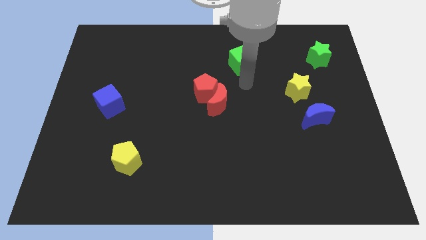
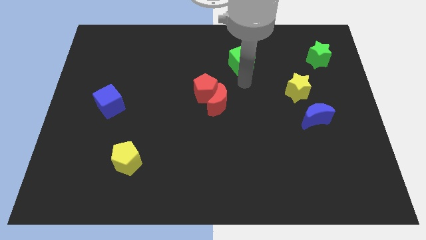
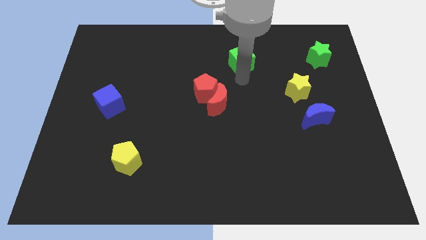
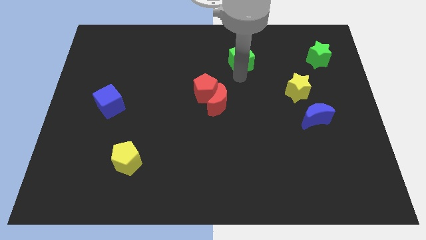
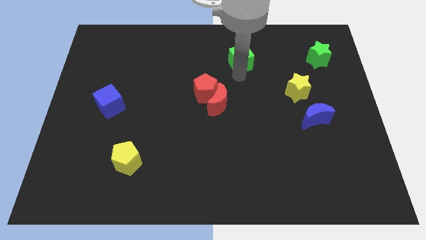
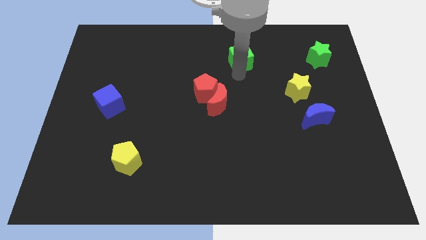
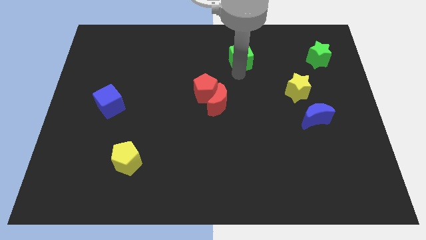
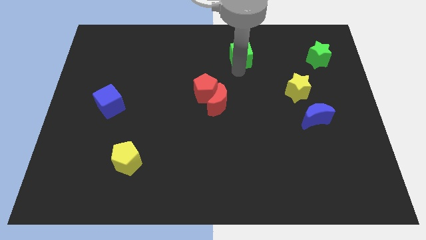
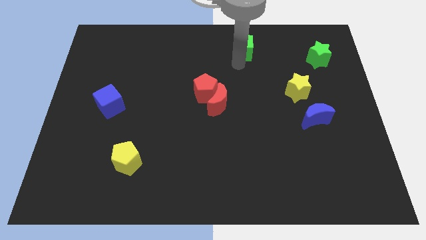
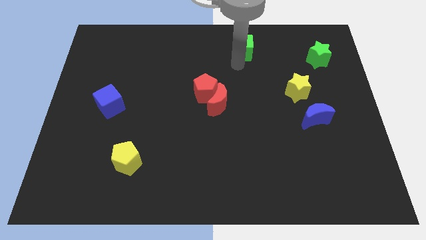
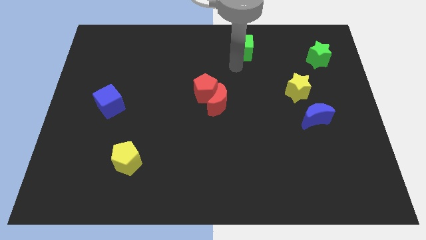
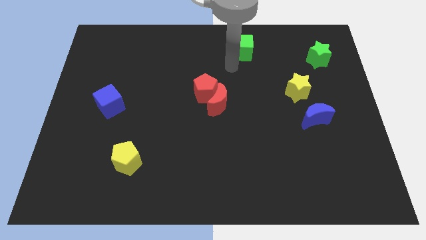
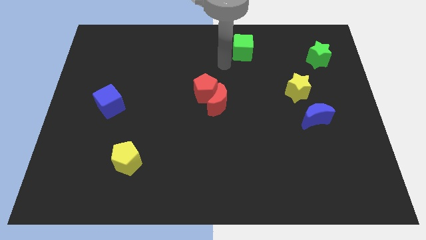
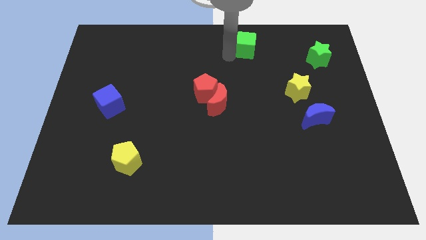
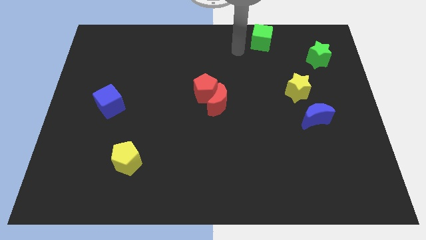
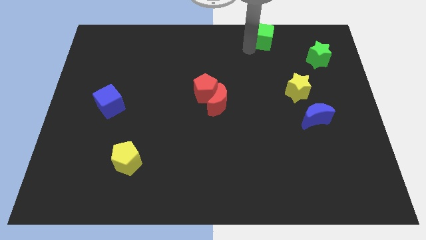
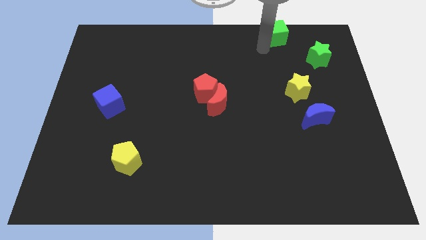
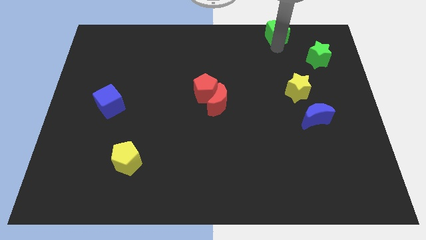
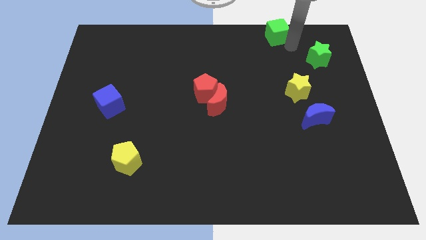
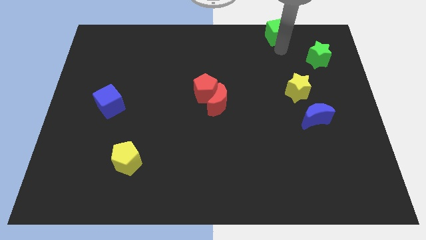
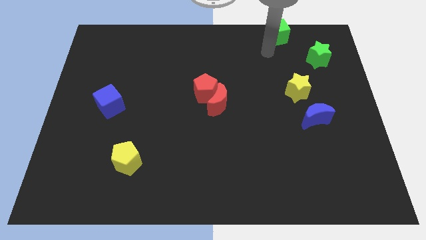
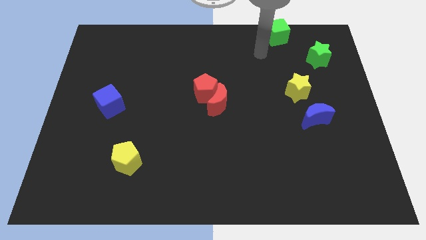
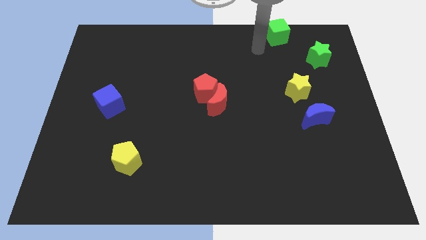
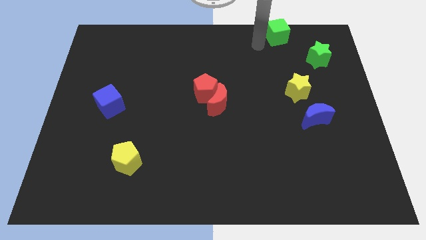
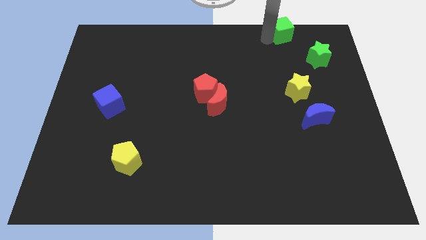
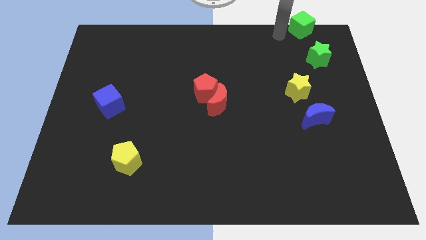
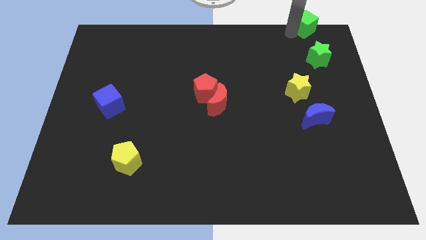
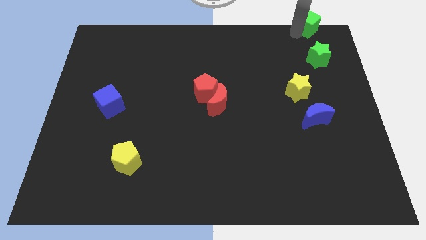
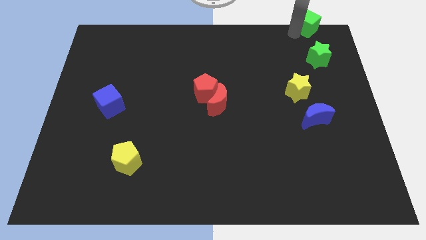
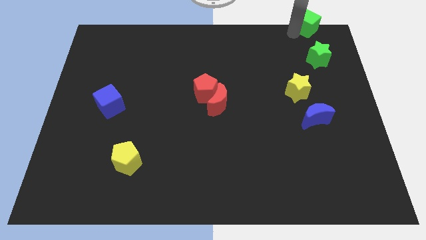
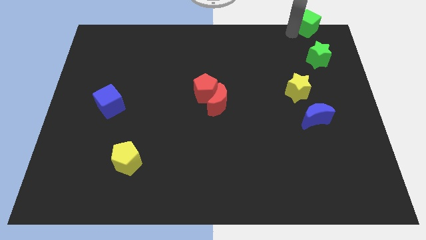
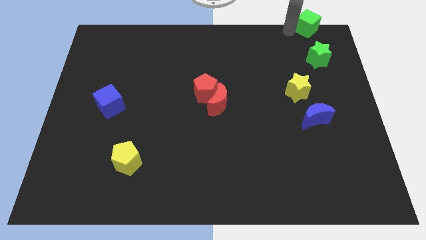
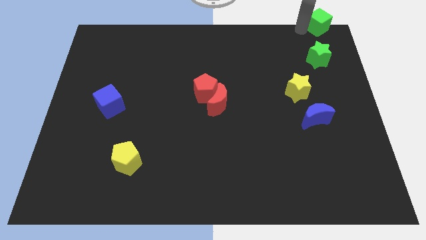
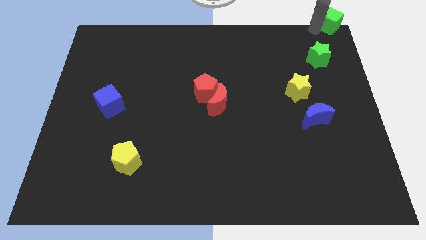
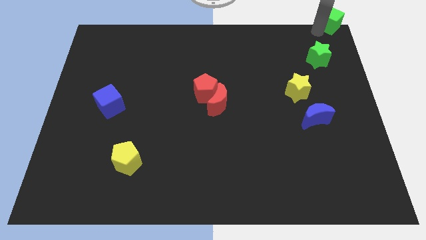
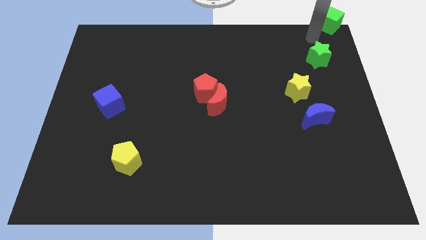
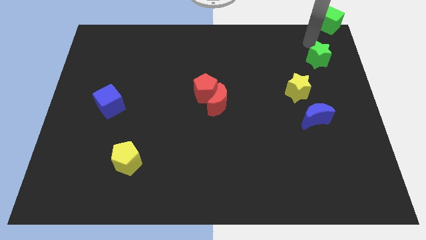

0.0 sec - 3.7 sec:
place green cube to the top right corner of the board

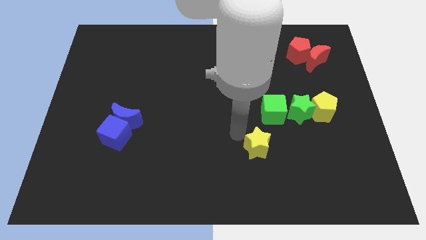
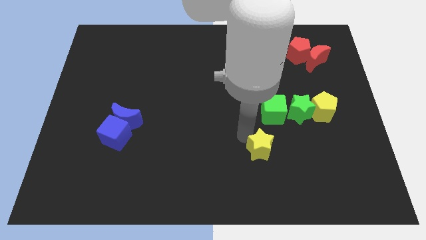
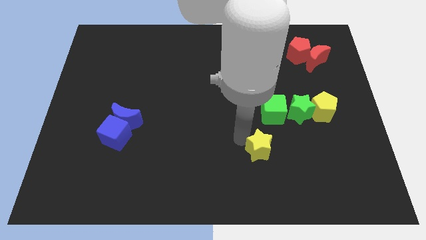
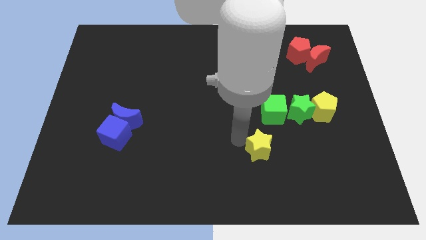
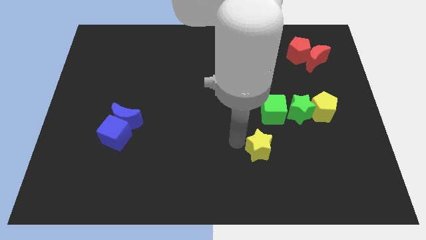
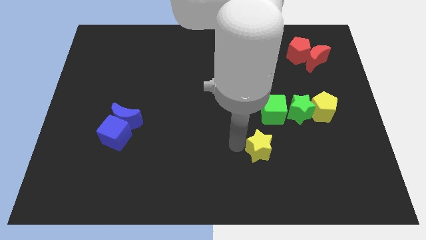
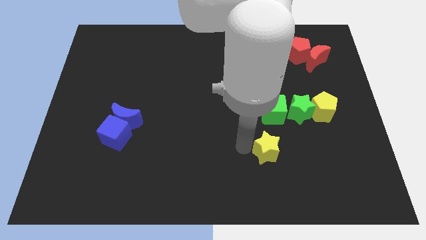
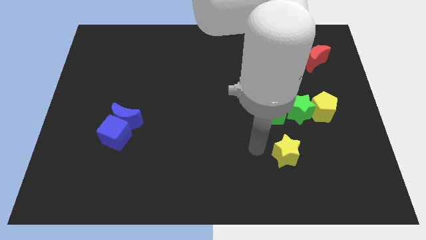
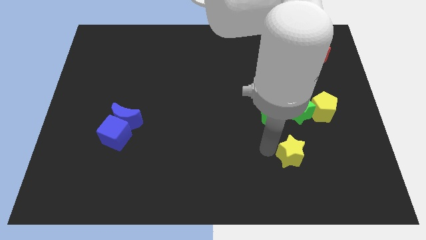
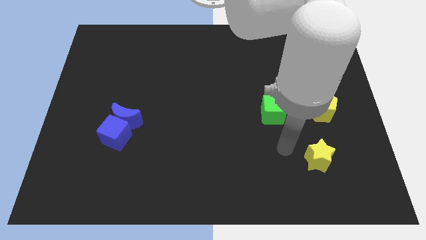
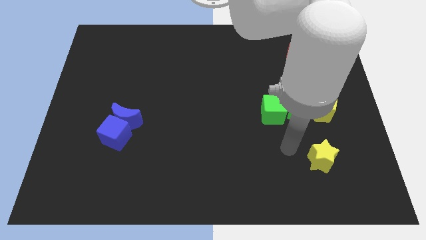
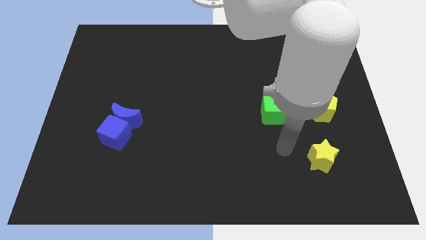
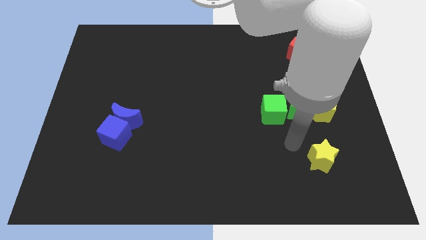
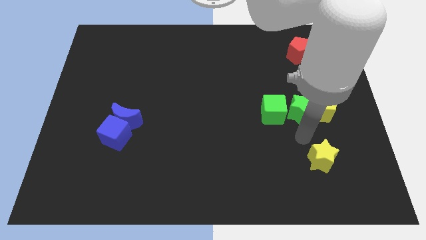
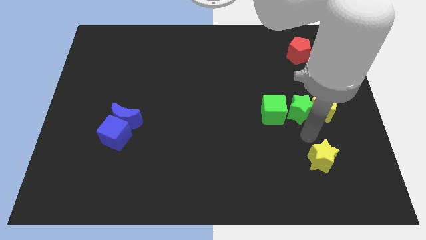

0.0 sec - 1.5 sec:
put the yellow star underneath the green star

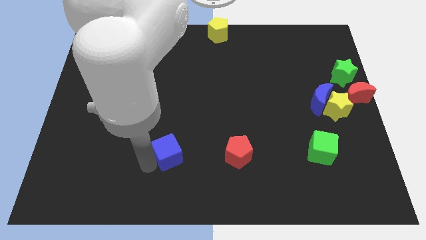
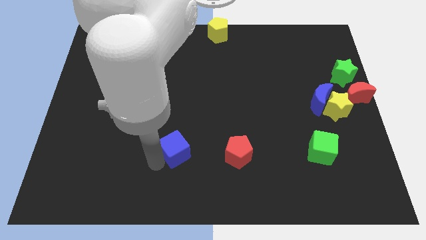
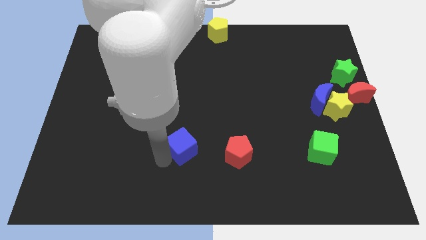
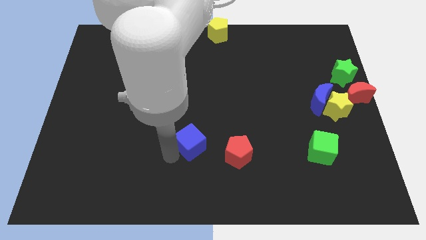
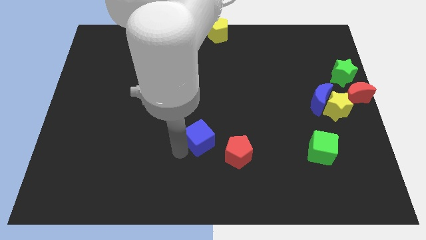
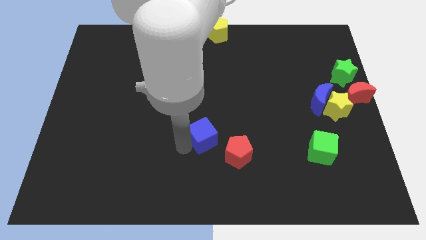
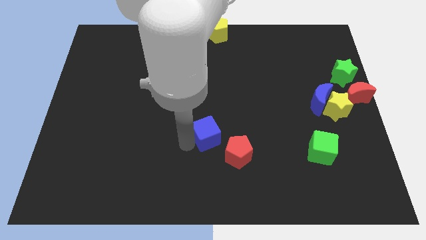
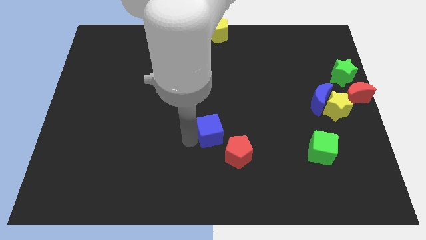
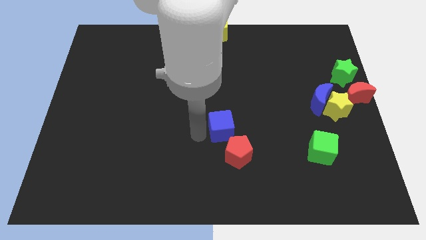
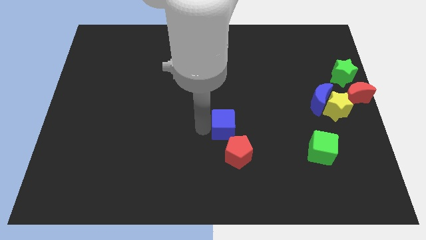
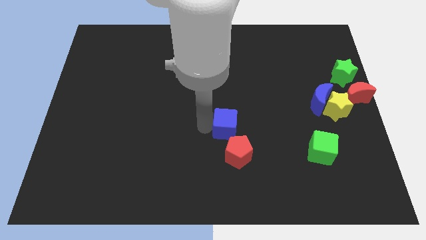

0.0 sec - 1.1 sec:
place blue cube above red pentagon

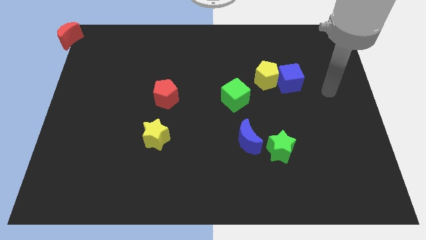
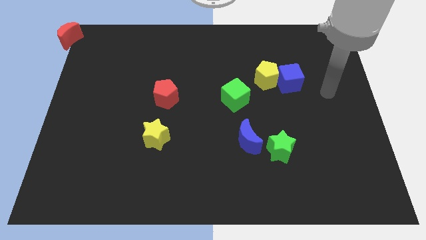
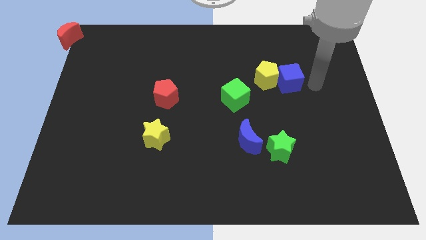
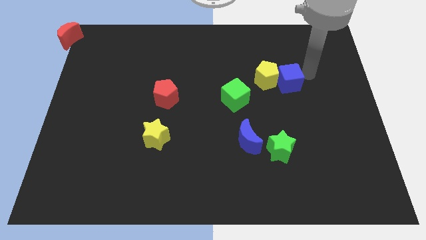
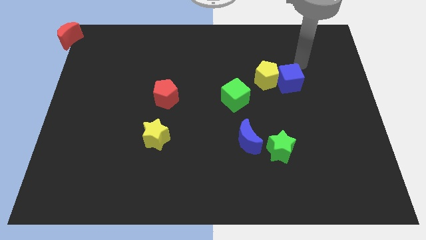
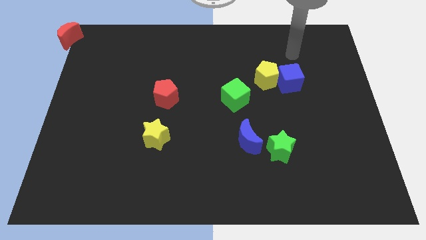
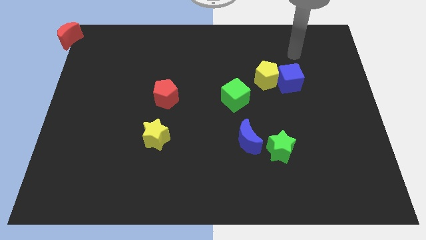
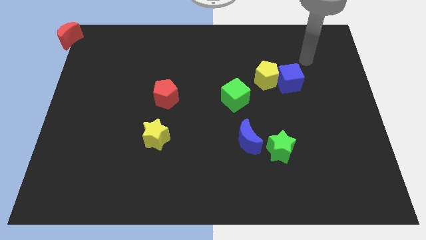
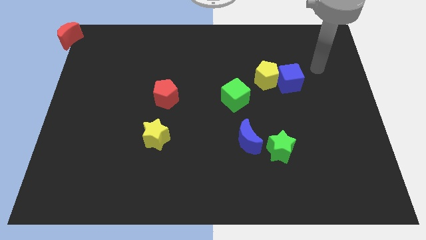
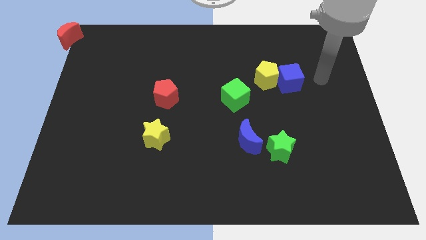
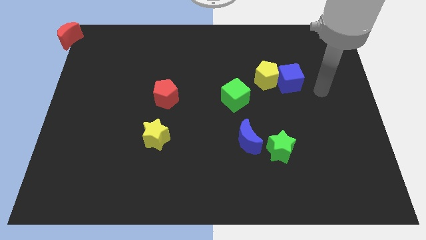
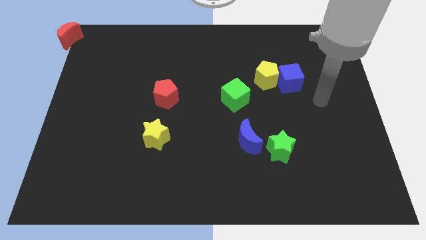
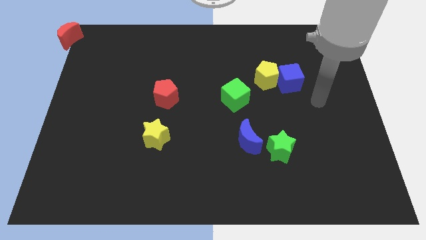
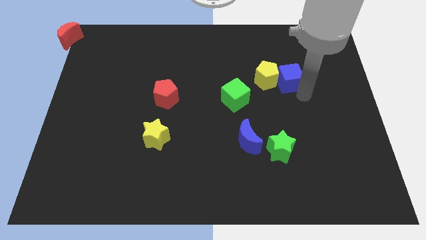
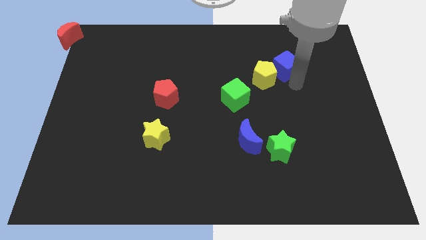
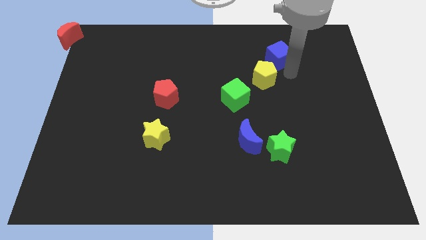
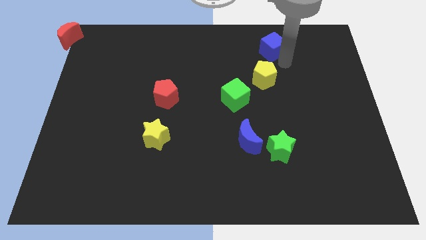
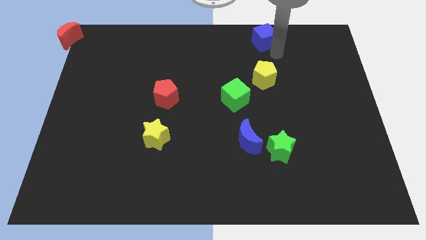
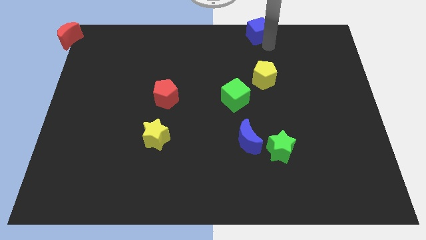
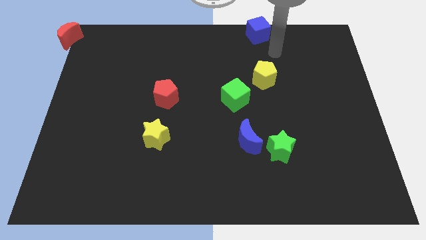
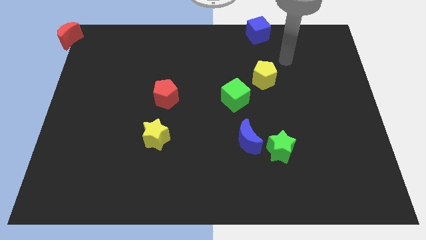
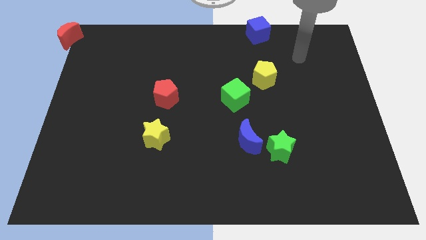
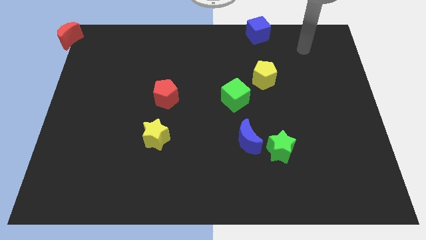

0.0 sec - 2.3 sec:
push the blue cube vertically to the top of the yellow pentagon

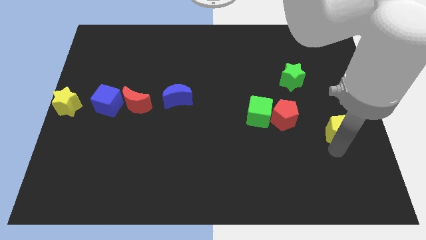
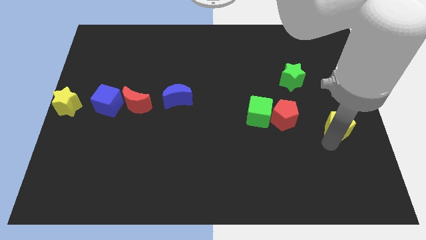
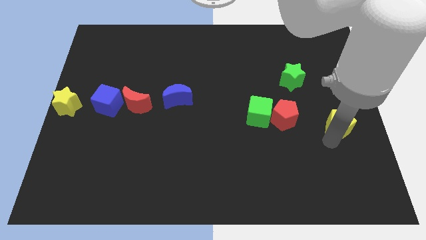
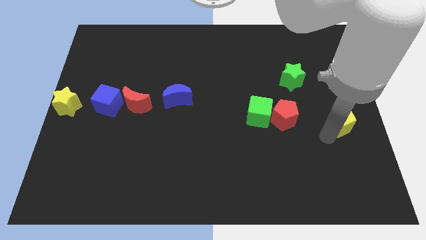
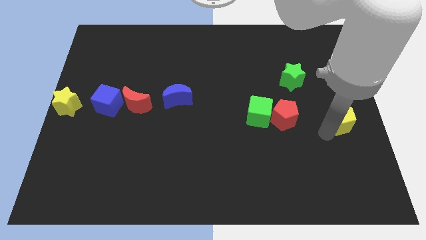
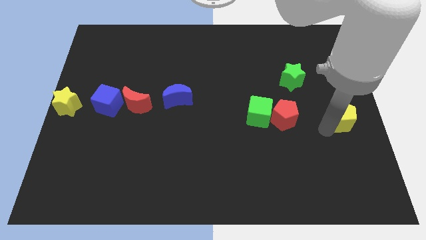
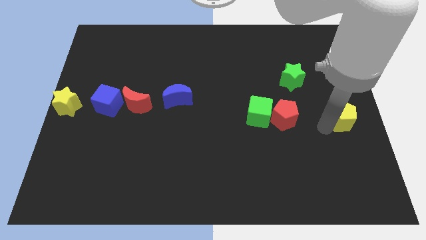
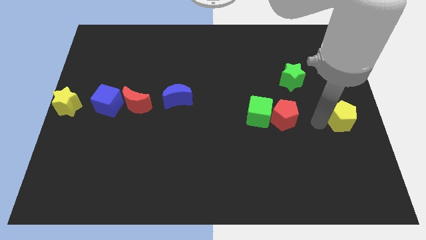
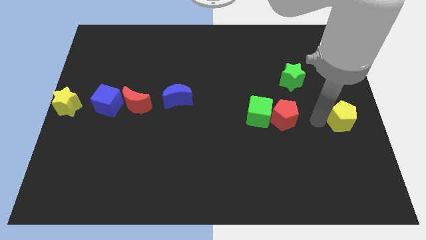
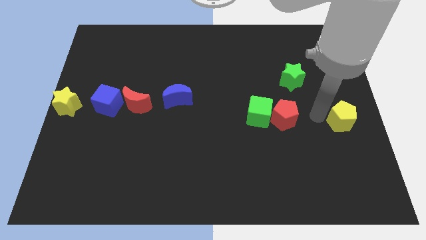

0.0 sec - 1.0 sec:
place the yellow pentagon parallel to red pentagon
